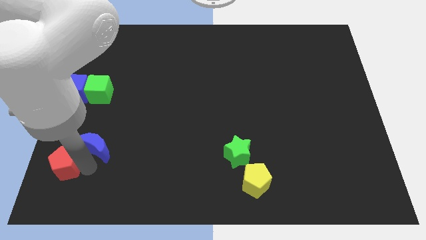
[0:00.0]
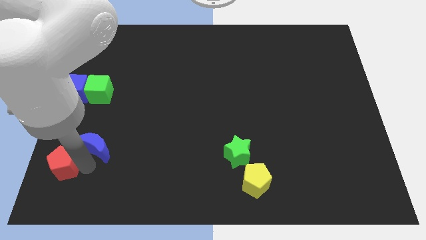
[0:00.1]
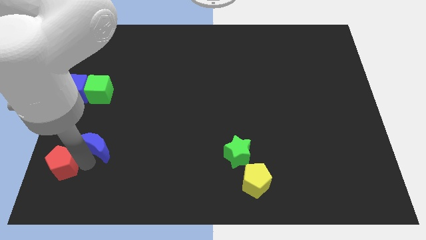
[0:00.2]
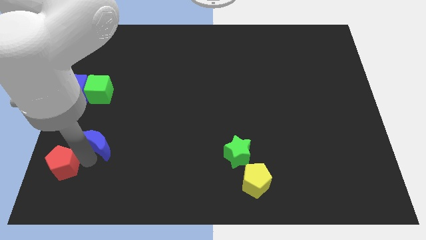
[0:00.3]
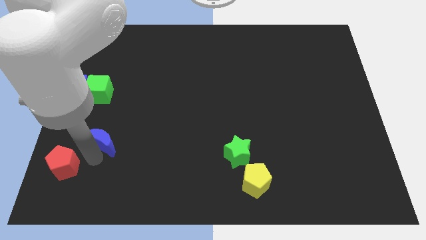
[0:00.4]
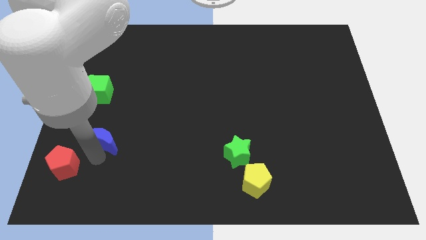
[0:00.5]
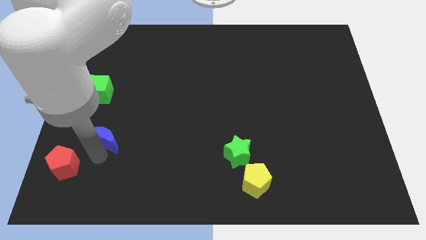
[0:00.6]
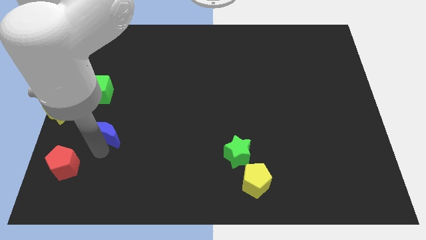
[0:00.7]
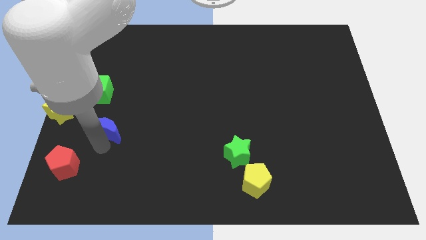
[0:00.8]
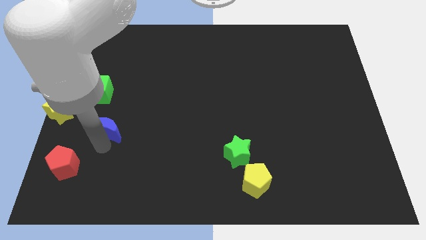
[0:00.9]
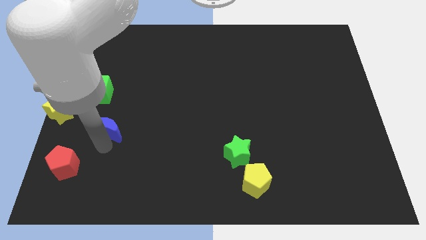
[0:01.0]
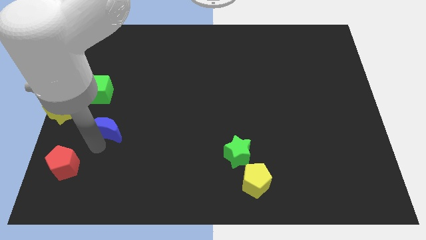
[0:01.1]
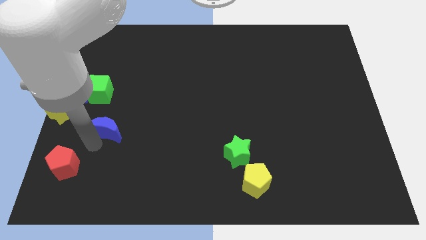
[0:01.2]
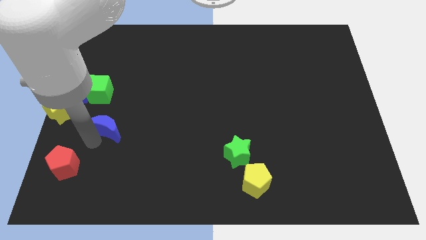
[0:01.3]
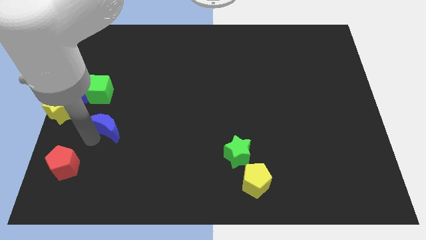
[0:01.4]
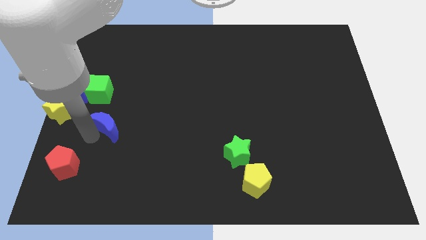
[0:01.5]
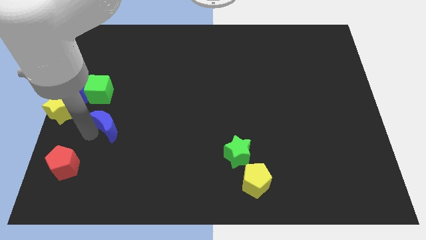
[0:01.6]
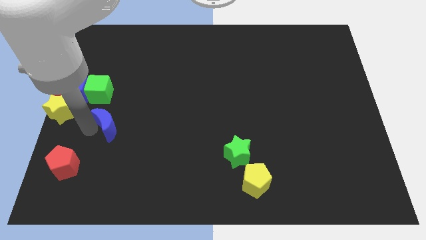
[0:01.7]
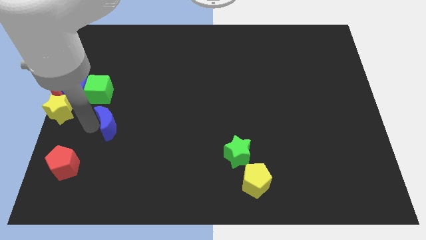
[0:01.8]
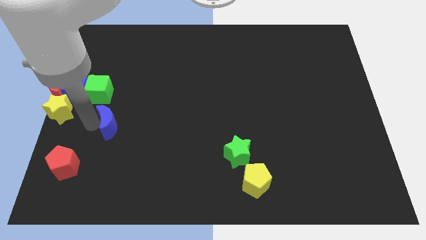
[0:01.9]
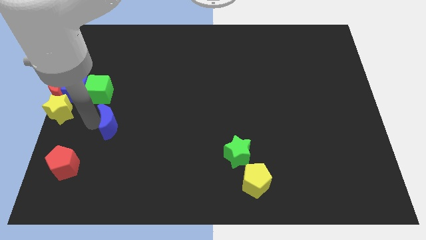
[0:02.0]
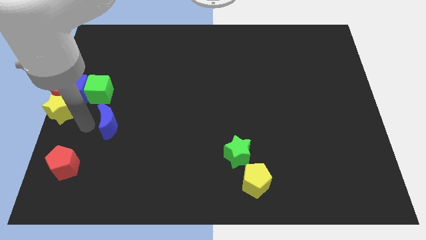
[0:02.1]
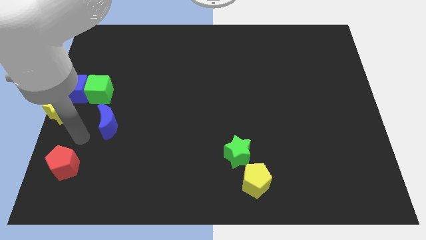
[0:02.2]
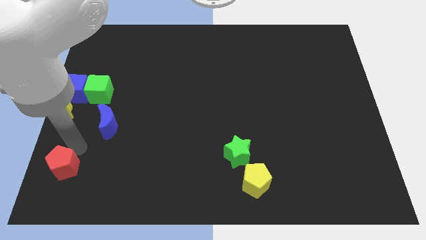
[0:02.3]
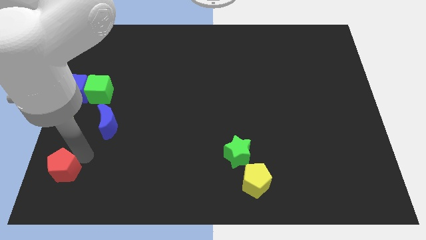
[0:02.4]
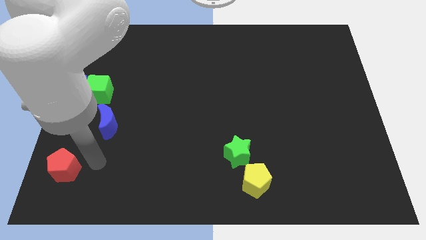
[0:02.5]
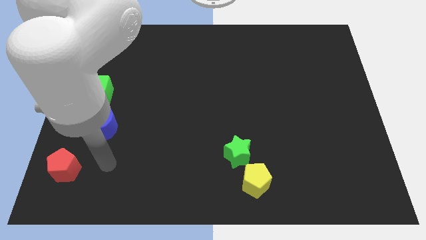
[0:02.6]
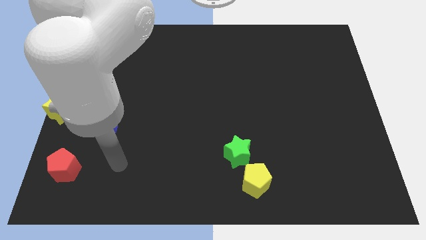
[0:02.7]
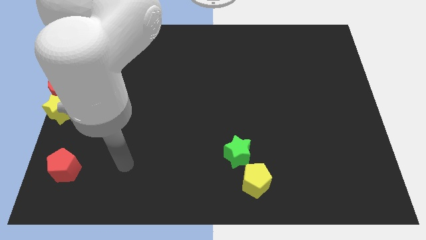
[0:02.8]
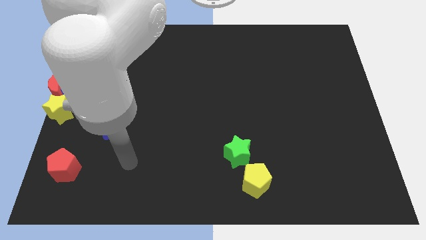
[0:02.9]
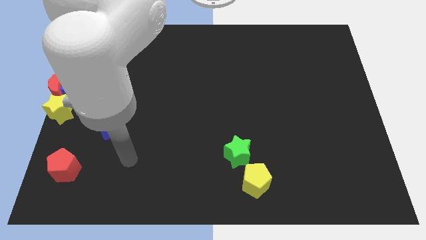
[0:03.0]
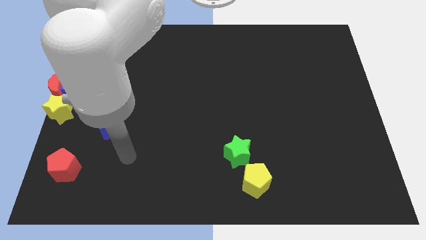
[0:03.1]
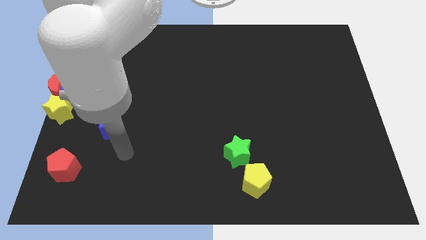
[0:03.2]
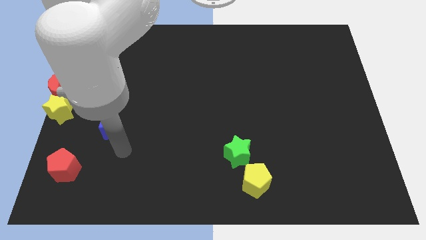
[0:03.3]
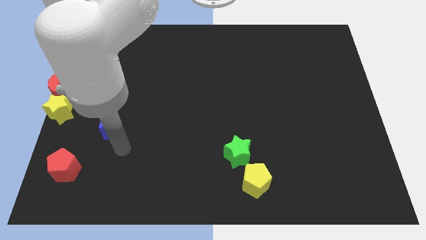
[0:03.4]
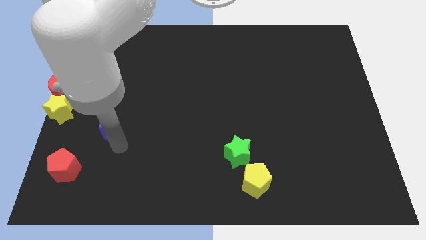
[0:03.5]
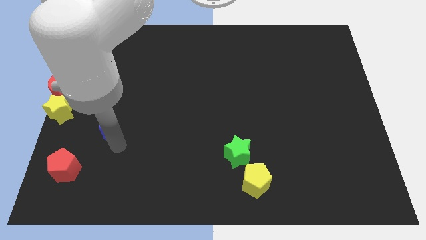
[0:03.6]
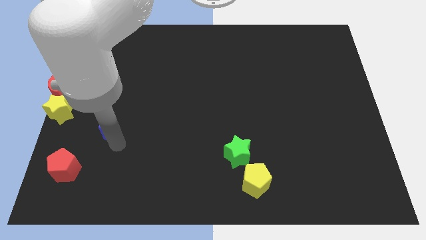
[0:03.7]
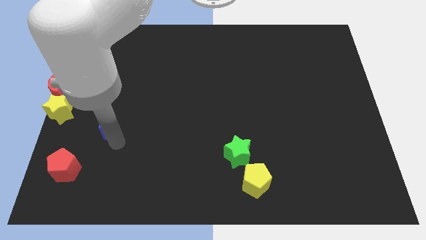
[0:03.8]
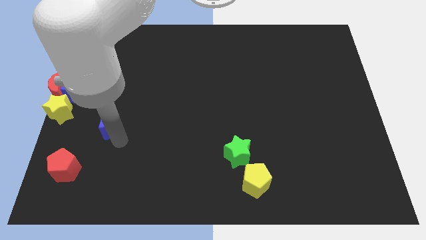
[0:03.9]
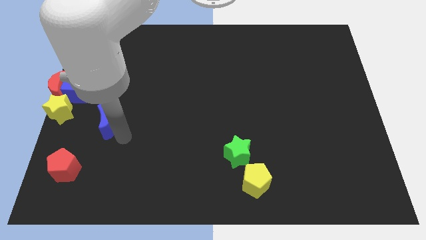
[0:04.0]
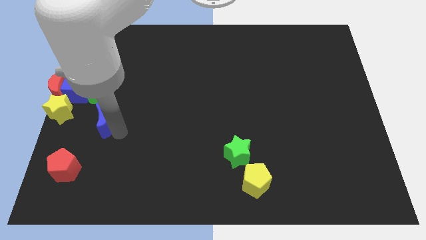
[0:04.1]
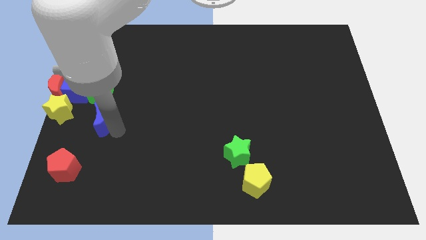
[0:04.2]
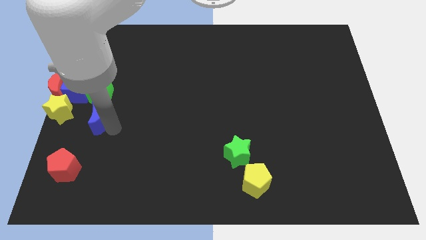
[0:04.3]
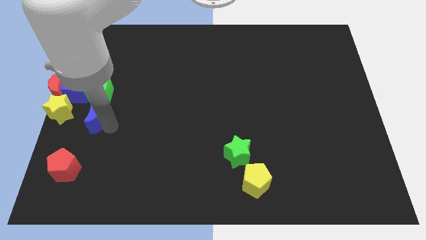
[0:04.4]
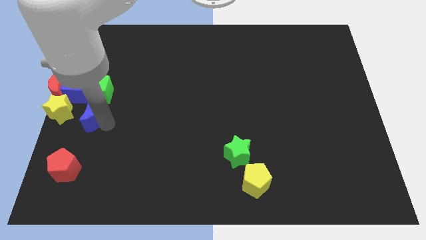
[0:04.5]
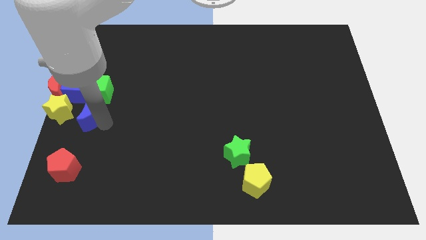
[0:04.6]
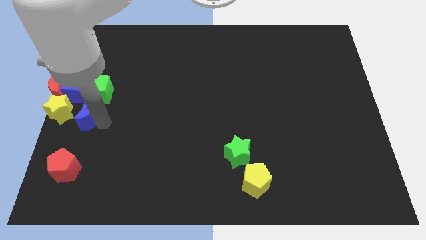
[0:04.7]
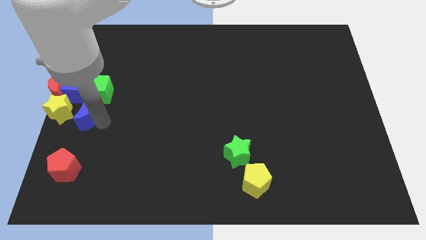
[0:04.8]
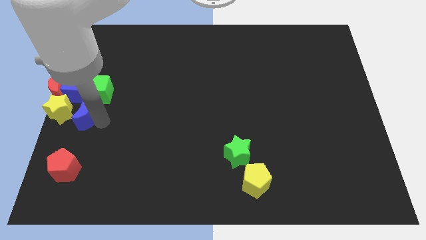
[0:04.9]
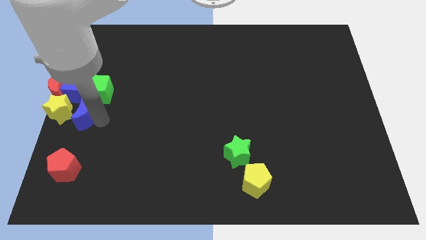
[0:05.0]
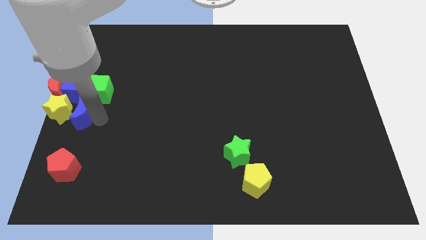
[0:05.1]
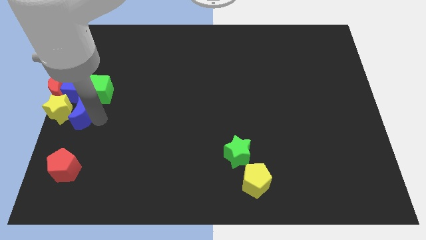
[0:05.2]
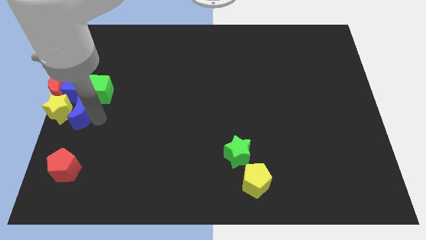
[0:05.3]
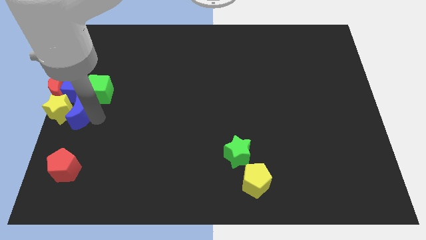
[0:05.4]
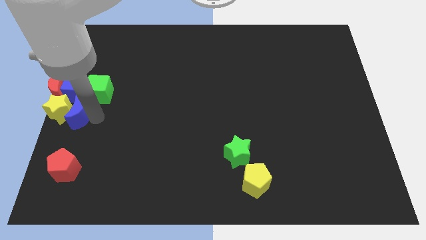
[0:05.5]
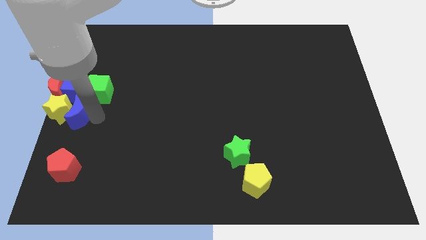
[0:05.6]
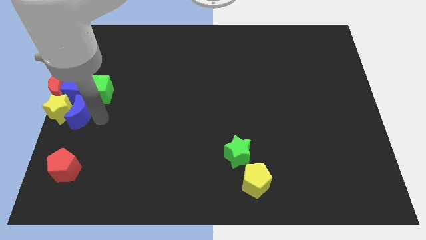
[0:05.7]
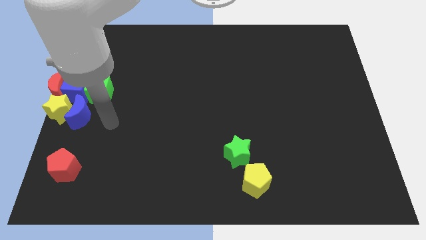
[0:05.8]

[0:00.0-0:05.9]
push the blue moon to the bottom side of the blue cube

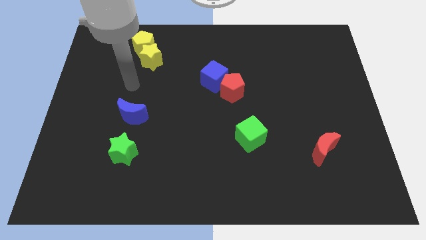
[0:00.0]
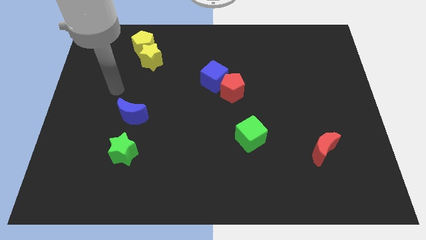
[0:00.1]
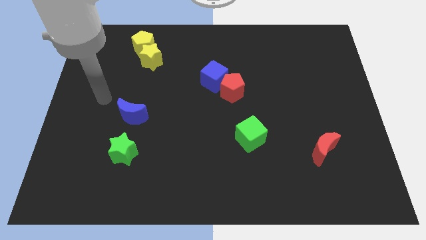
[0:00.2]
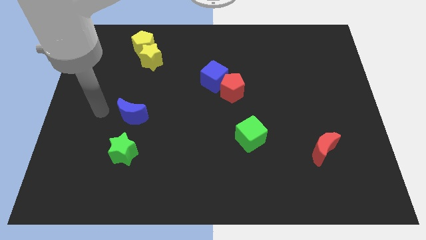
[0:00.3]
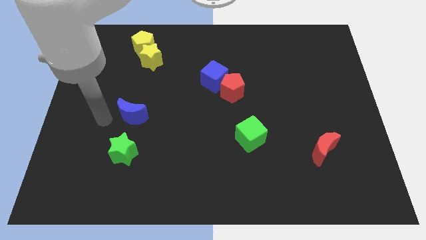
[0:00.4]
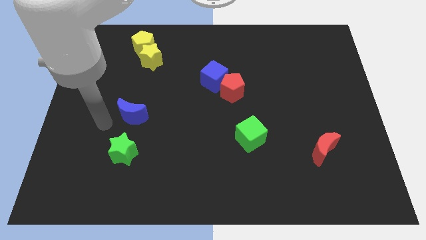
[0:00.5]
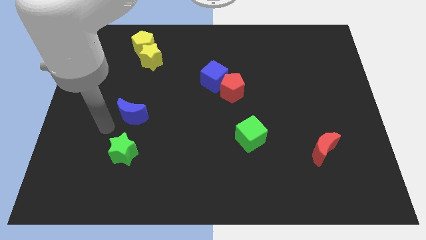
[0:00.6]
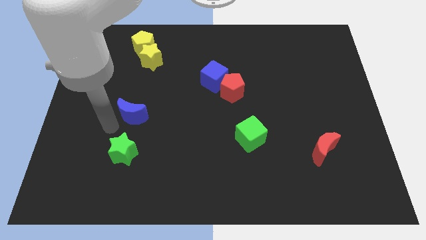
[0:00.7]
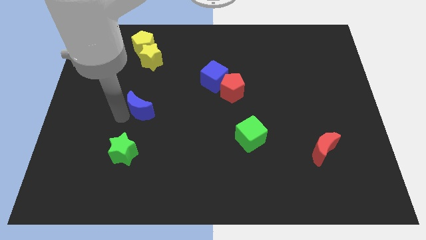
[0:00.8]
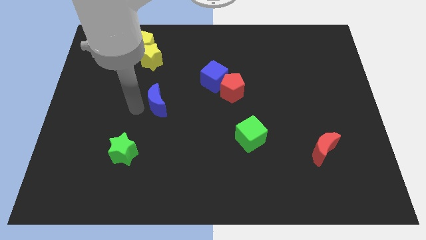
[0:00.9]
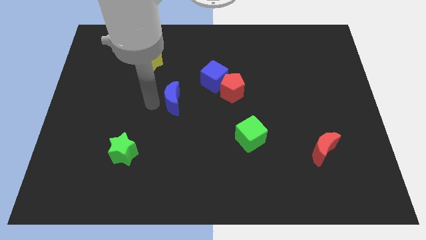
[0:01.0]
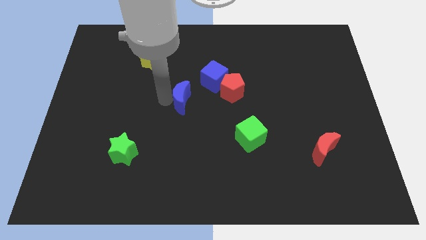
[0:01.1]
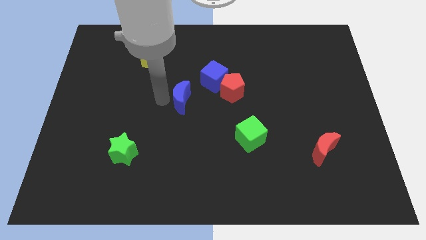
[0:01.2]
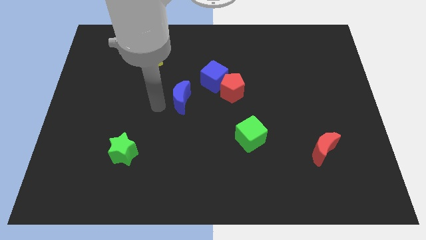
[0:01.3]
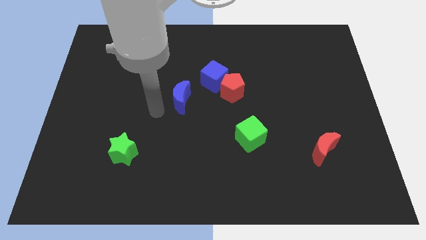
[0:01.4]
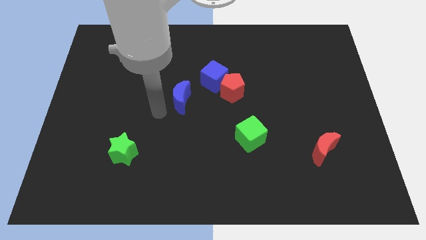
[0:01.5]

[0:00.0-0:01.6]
move blue moon close to the blue cube

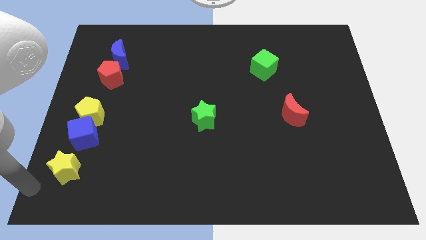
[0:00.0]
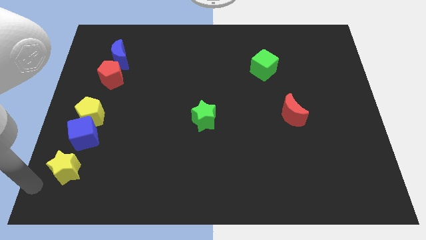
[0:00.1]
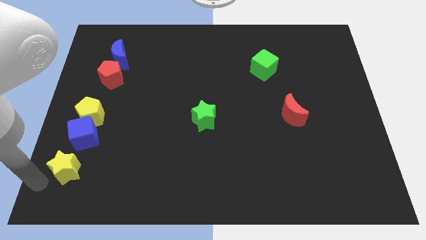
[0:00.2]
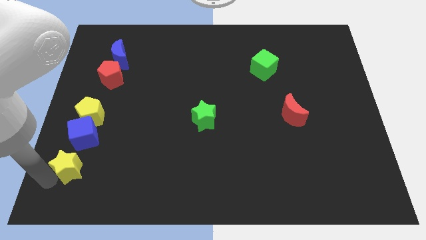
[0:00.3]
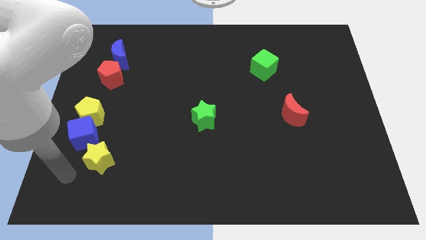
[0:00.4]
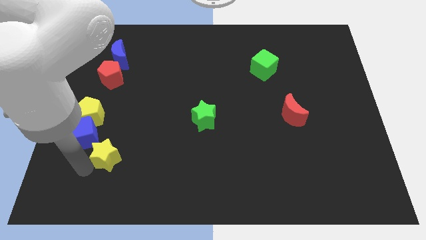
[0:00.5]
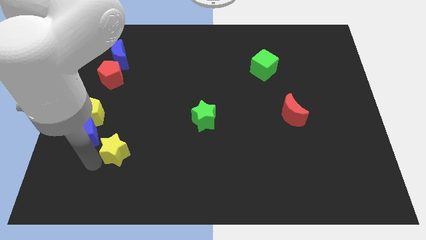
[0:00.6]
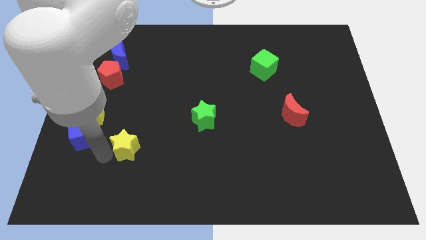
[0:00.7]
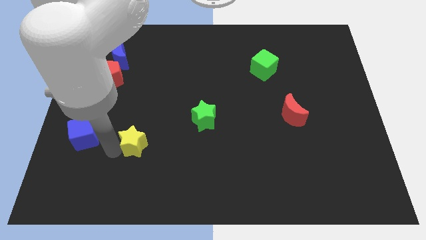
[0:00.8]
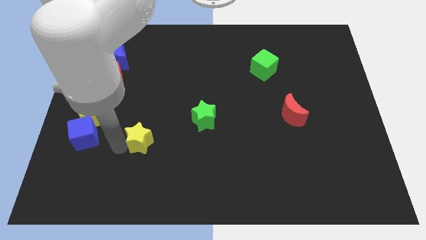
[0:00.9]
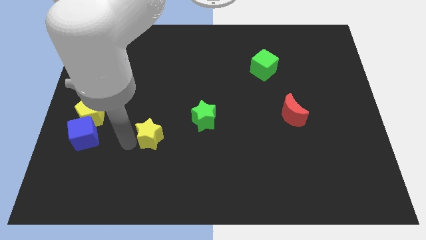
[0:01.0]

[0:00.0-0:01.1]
move the yellow star parallel right to the blue cube

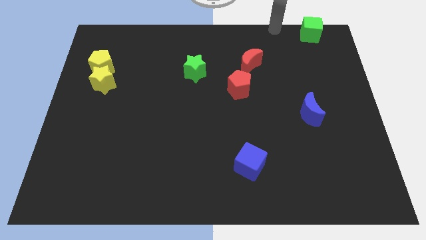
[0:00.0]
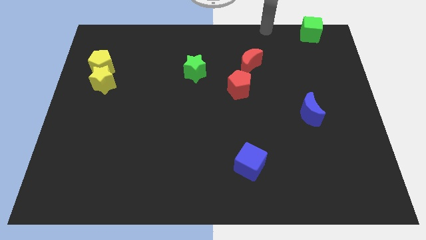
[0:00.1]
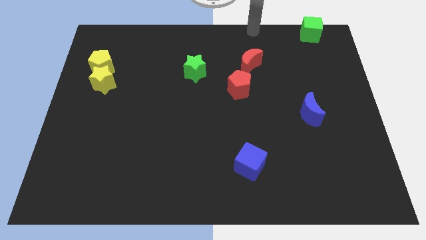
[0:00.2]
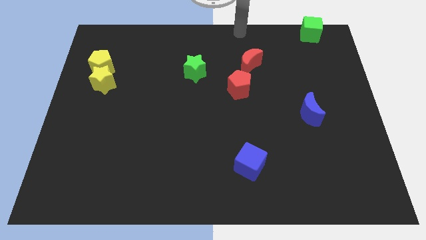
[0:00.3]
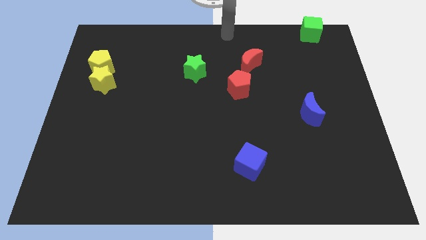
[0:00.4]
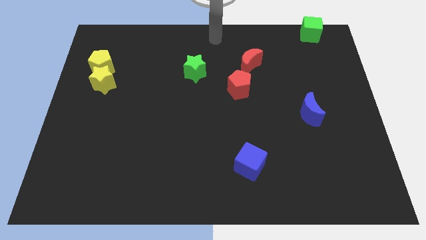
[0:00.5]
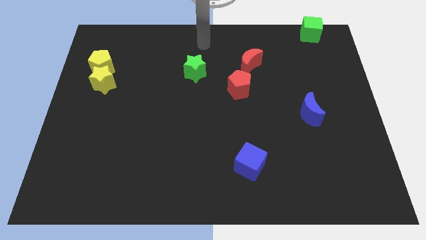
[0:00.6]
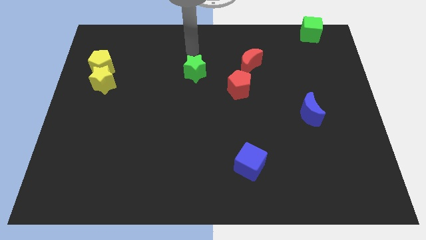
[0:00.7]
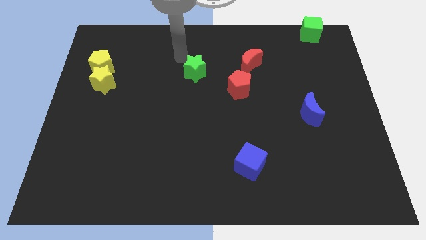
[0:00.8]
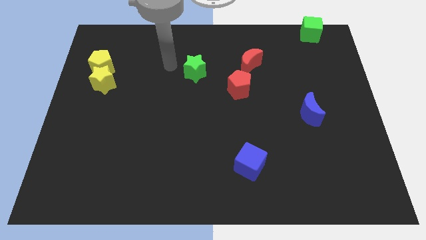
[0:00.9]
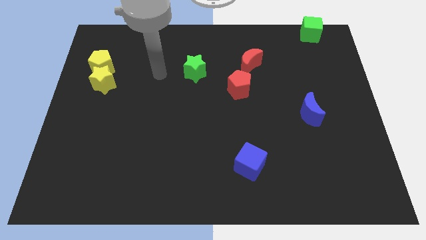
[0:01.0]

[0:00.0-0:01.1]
point your arm at the left of the green star
